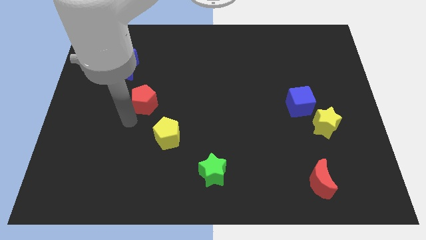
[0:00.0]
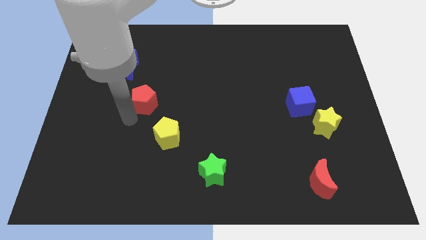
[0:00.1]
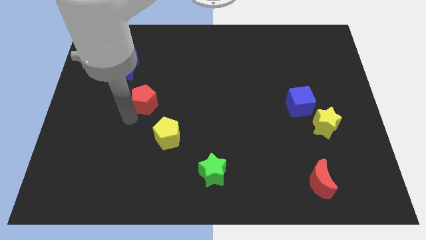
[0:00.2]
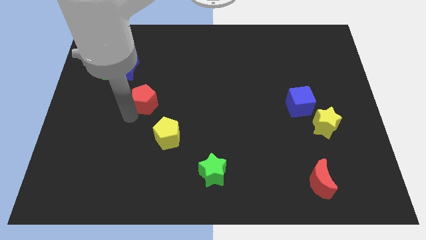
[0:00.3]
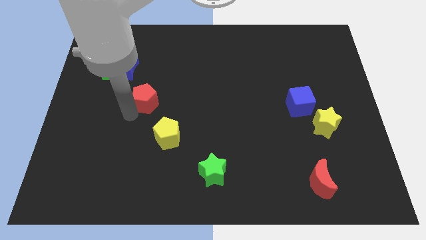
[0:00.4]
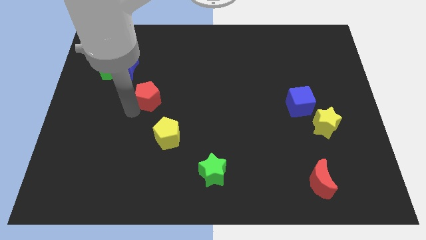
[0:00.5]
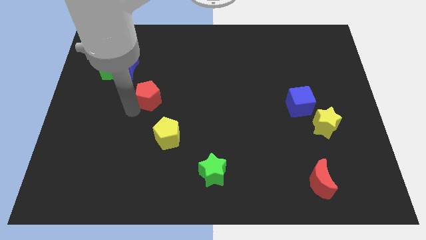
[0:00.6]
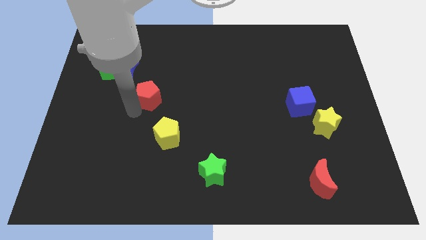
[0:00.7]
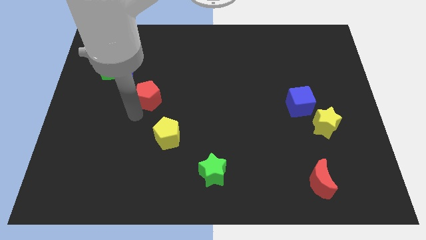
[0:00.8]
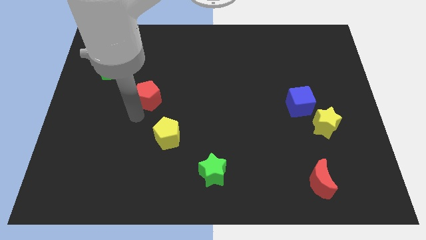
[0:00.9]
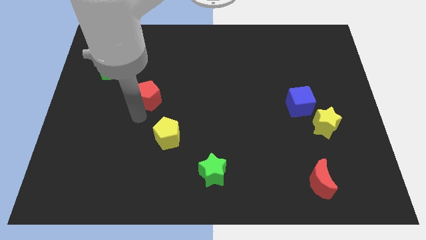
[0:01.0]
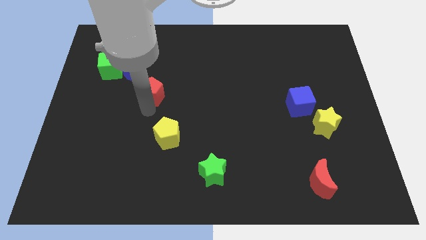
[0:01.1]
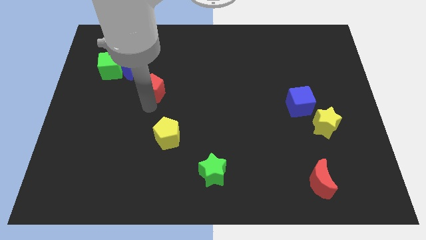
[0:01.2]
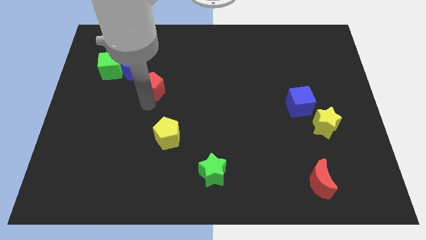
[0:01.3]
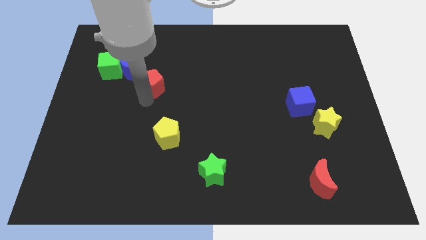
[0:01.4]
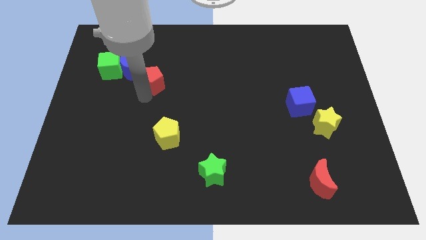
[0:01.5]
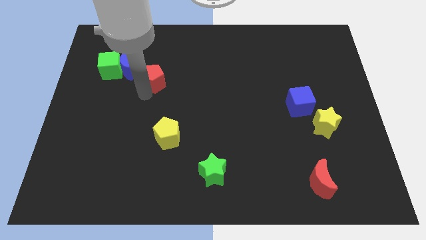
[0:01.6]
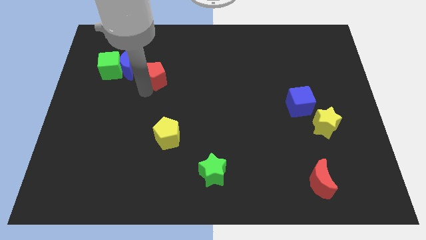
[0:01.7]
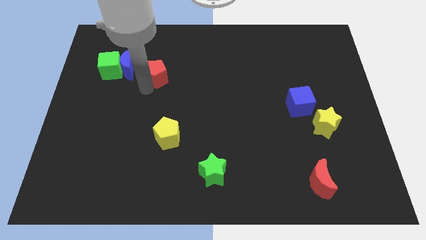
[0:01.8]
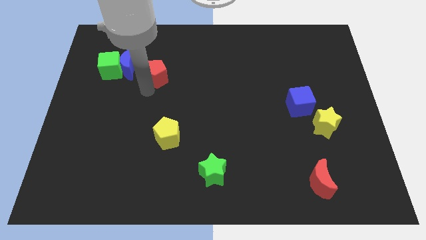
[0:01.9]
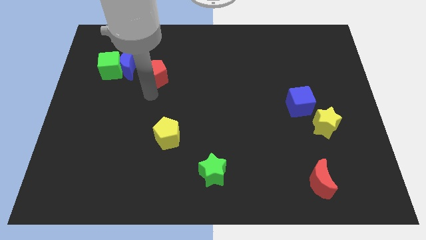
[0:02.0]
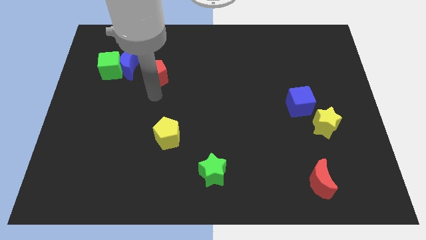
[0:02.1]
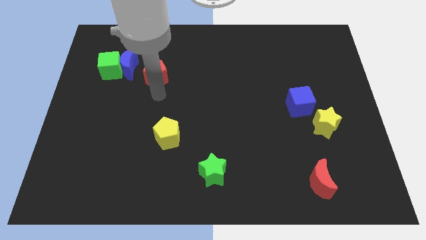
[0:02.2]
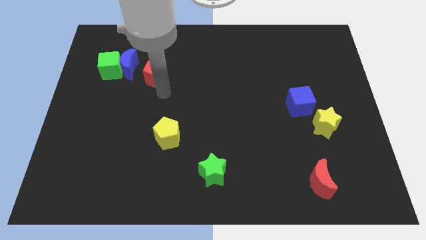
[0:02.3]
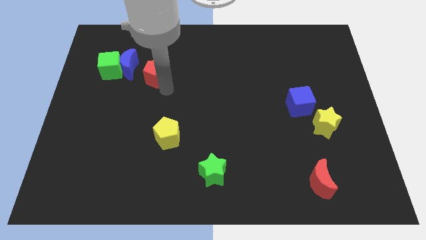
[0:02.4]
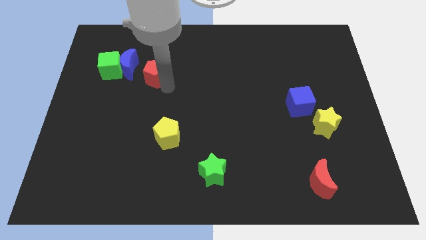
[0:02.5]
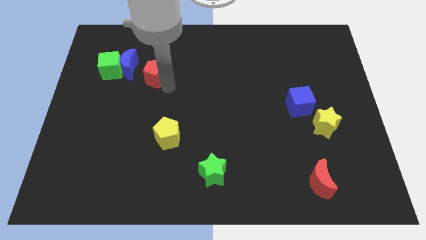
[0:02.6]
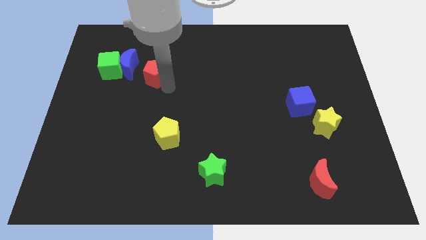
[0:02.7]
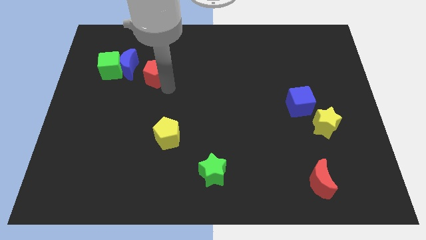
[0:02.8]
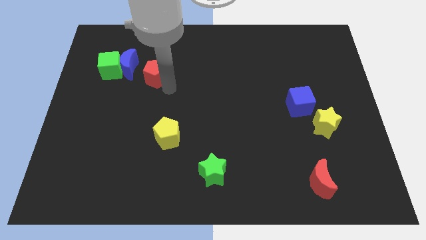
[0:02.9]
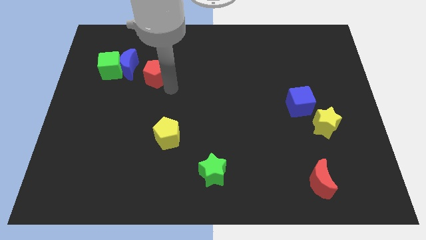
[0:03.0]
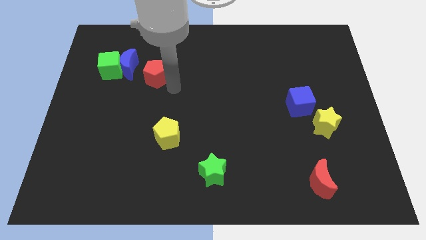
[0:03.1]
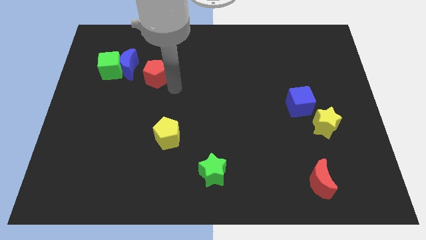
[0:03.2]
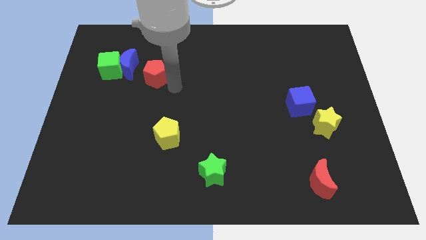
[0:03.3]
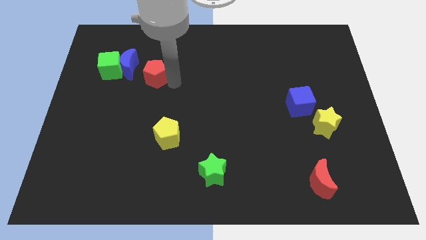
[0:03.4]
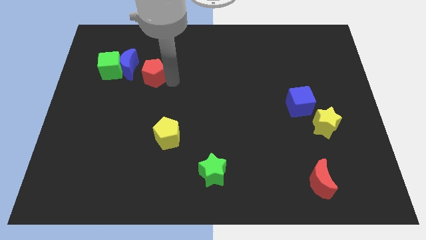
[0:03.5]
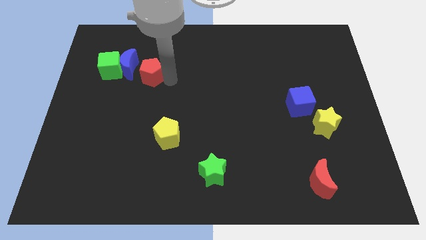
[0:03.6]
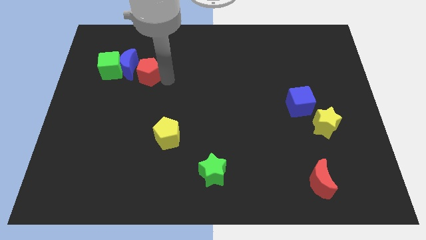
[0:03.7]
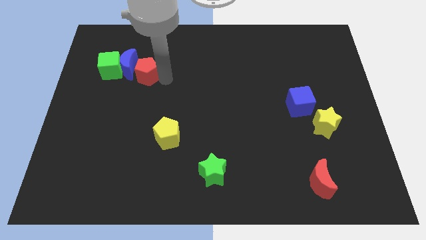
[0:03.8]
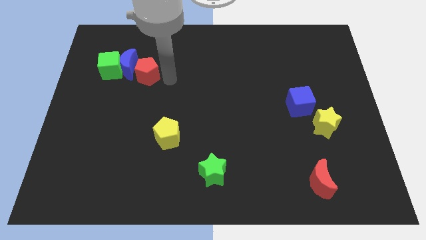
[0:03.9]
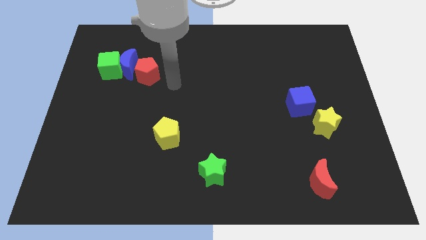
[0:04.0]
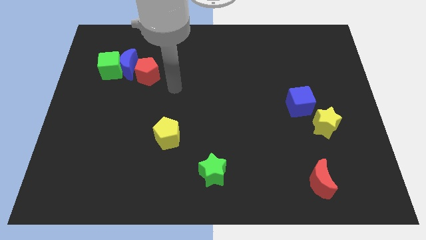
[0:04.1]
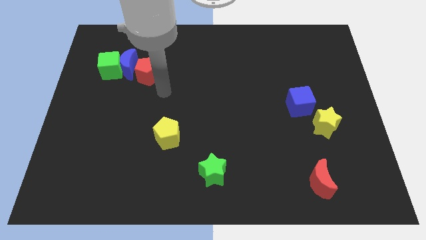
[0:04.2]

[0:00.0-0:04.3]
move the red pentagon to the right of the blue crescent

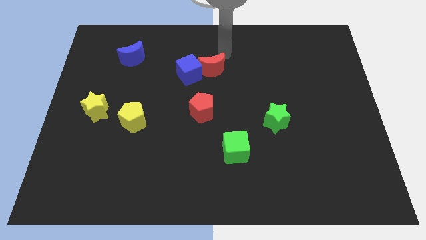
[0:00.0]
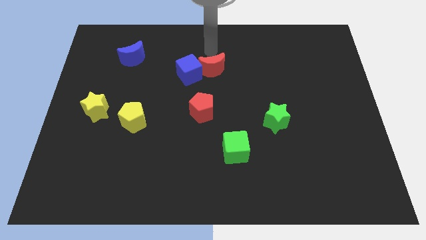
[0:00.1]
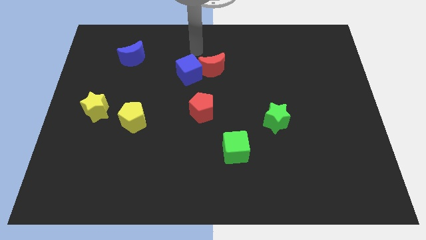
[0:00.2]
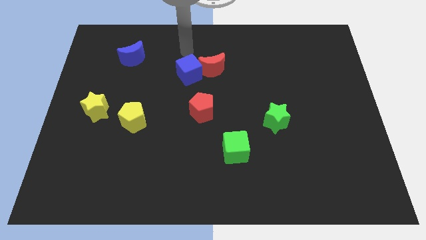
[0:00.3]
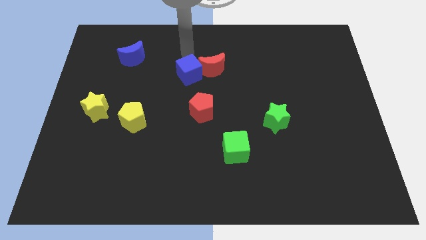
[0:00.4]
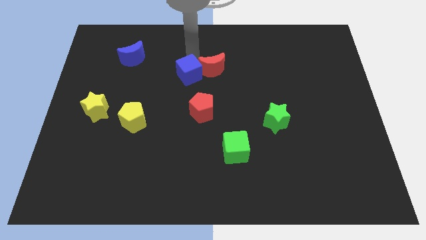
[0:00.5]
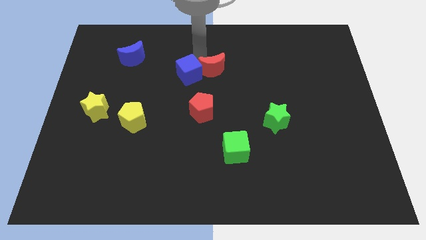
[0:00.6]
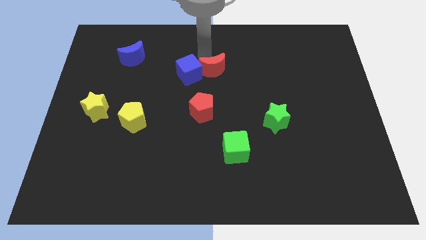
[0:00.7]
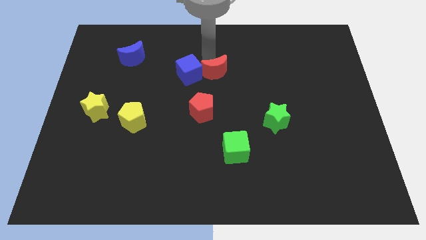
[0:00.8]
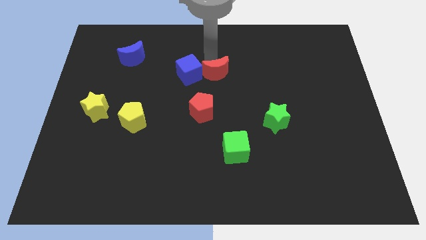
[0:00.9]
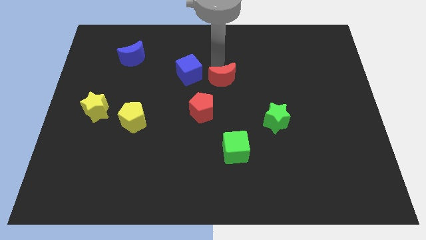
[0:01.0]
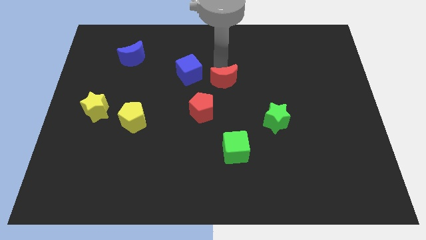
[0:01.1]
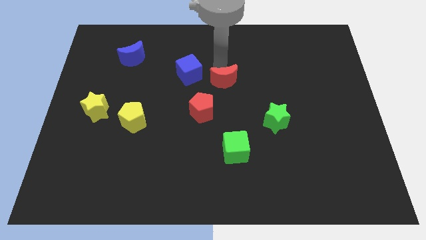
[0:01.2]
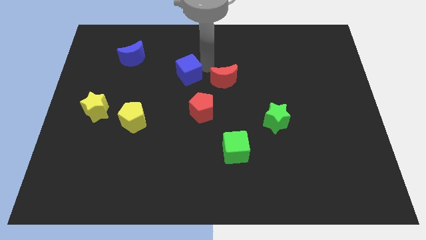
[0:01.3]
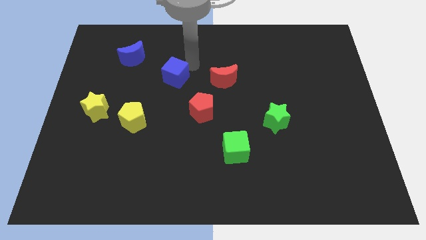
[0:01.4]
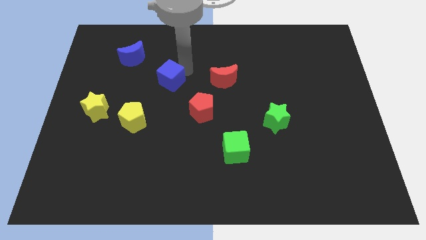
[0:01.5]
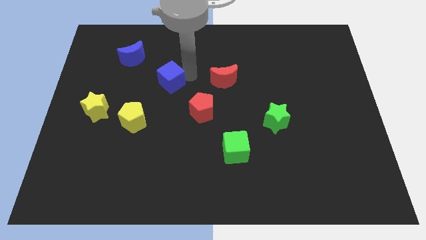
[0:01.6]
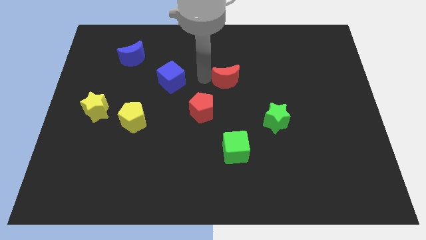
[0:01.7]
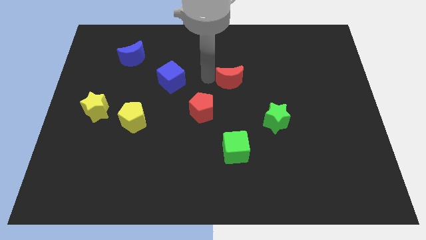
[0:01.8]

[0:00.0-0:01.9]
separate the red crescent and blue cube

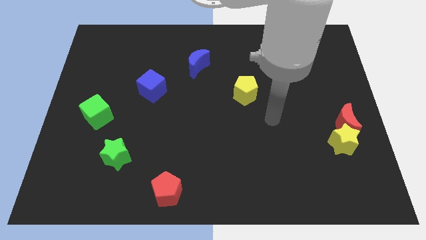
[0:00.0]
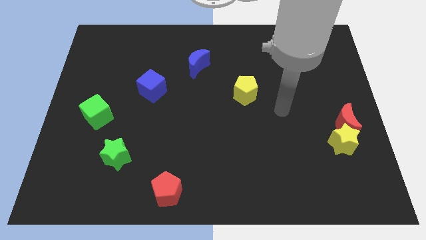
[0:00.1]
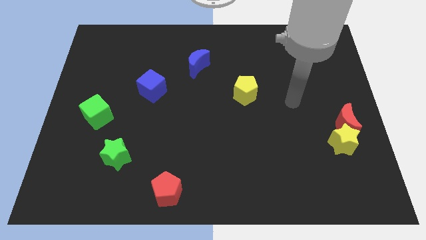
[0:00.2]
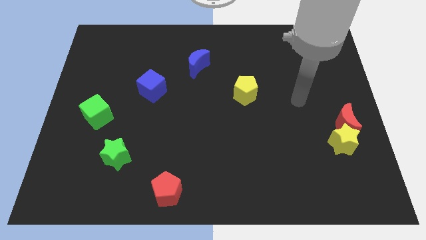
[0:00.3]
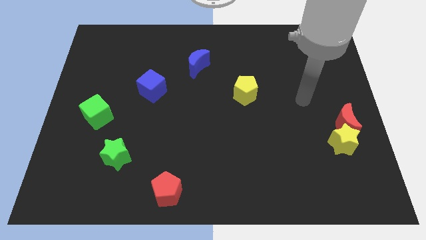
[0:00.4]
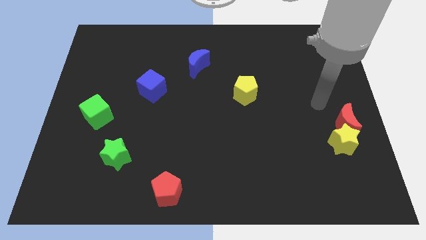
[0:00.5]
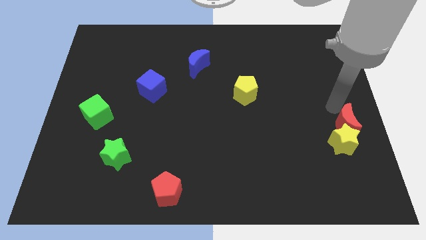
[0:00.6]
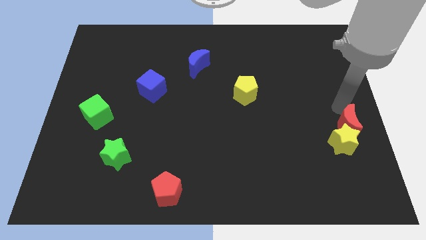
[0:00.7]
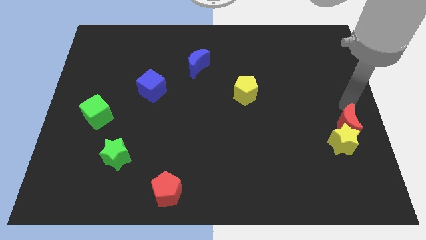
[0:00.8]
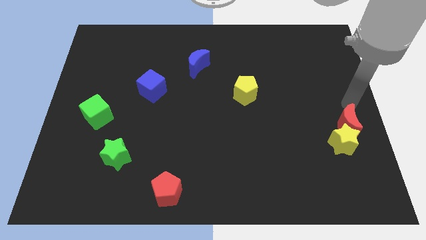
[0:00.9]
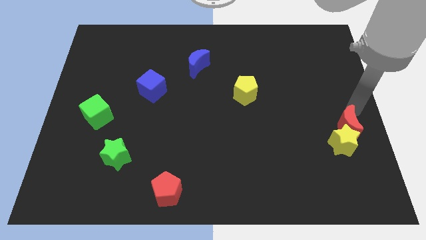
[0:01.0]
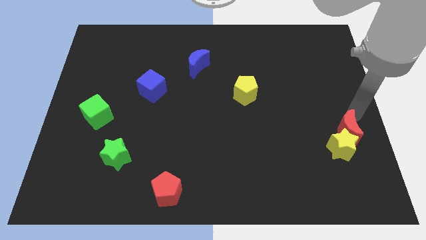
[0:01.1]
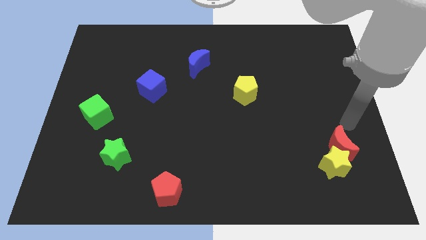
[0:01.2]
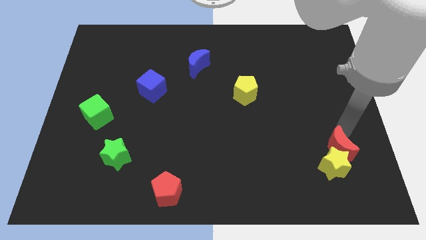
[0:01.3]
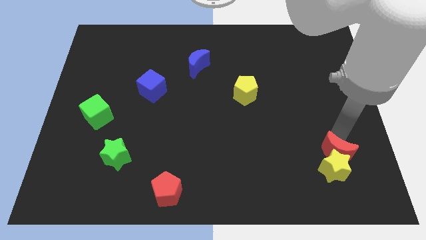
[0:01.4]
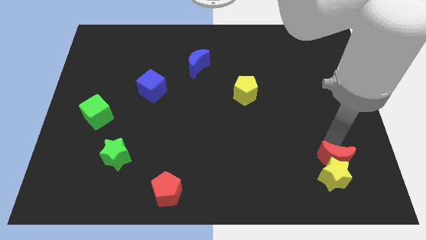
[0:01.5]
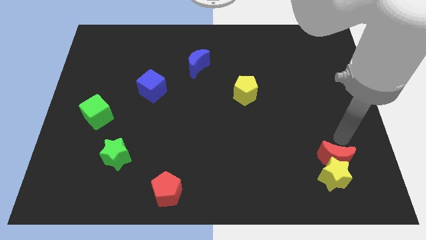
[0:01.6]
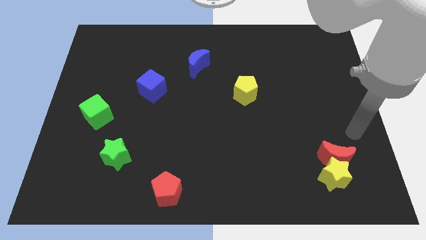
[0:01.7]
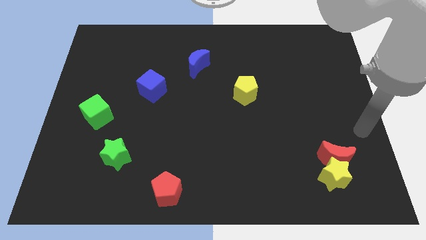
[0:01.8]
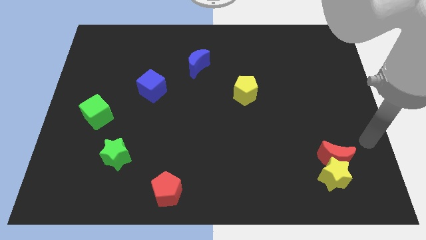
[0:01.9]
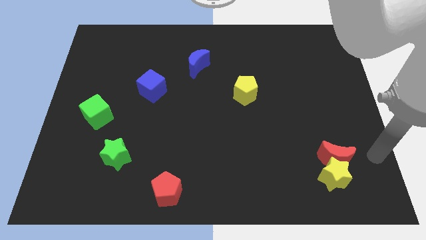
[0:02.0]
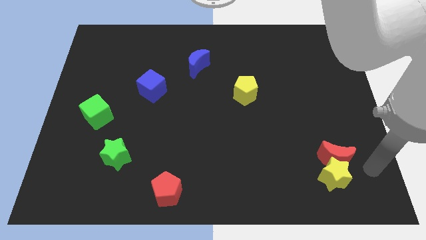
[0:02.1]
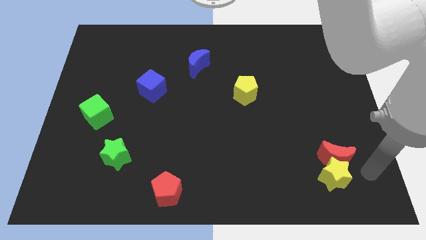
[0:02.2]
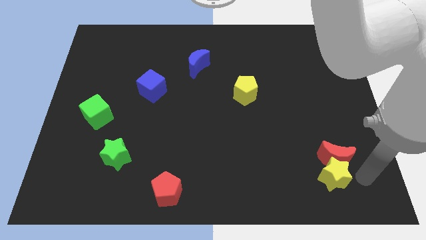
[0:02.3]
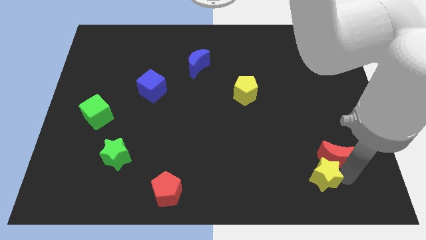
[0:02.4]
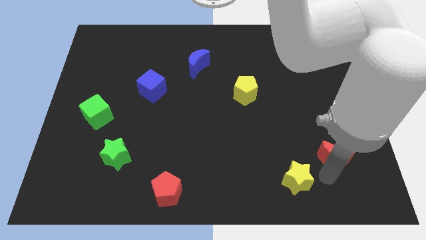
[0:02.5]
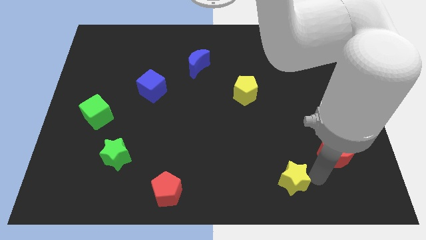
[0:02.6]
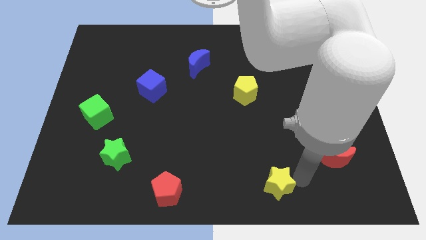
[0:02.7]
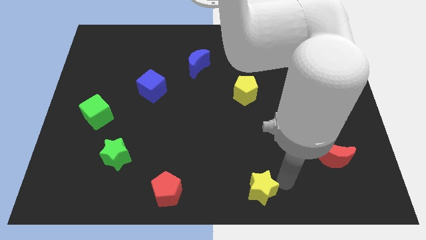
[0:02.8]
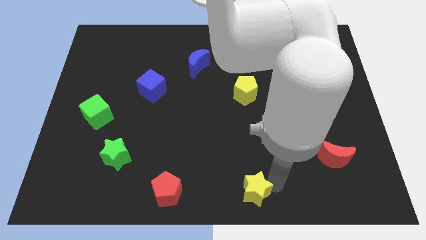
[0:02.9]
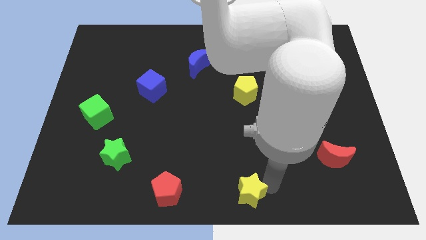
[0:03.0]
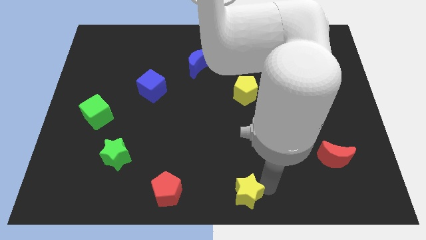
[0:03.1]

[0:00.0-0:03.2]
place yellow star to the bottom center of the board
